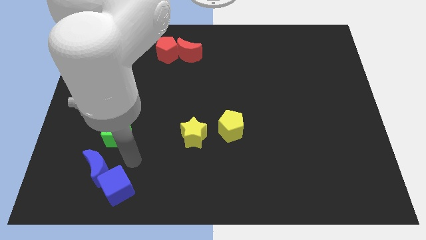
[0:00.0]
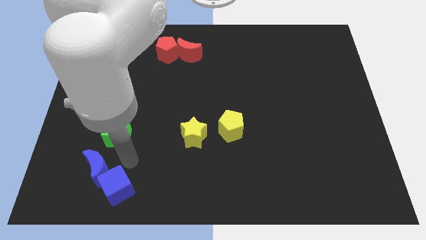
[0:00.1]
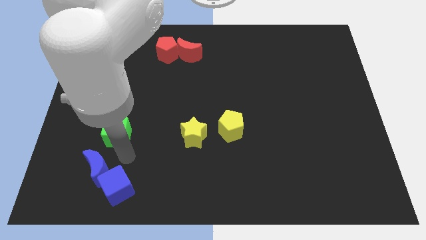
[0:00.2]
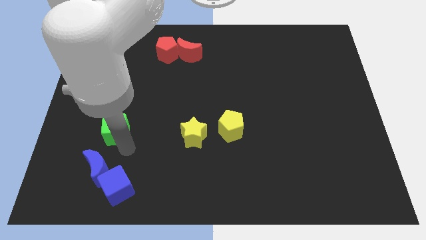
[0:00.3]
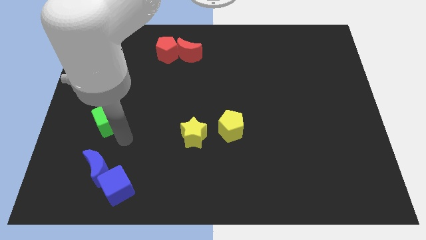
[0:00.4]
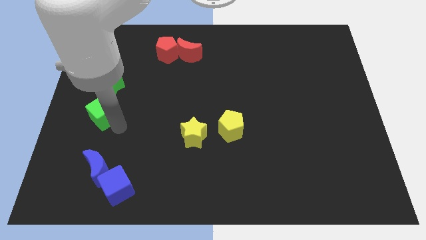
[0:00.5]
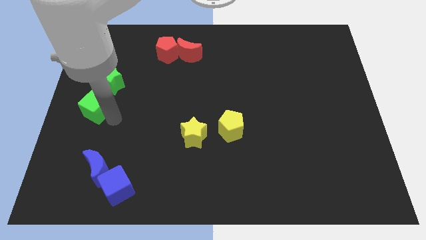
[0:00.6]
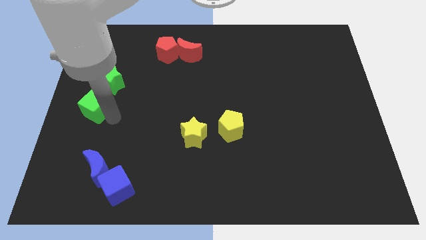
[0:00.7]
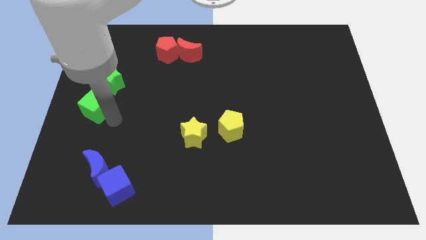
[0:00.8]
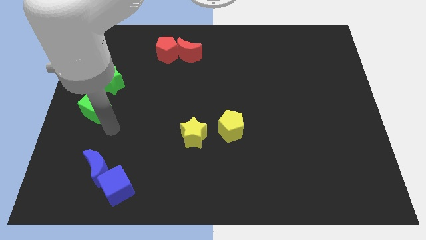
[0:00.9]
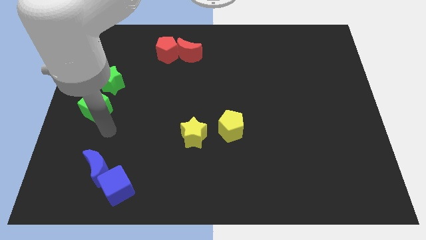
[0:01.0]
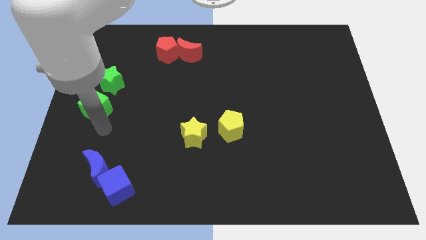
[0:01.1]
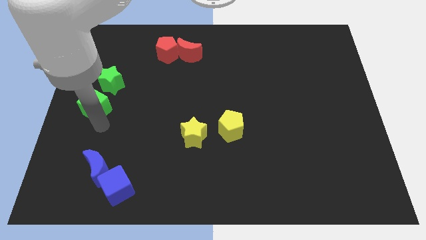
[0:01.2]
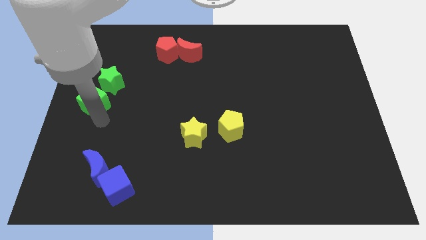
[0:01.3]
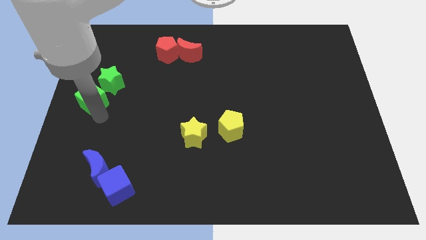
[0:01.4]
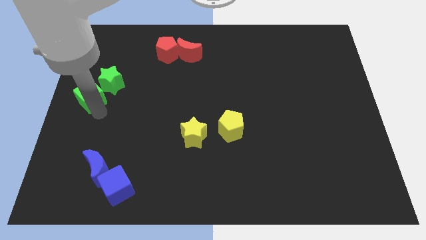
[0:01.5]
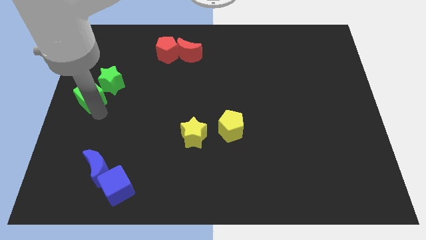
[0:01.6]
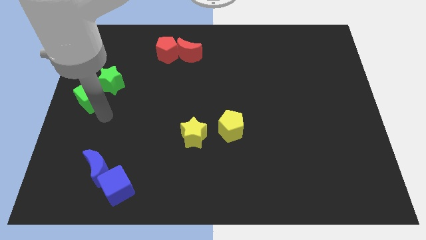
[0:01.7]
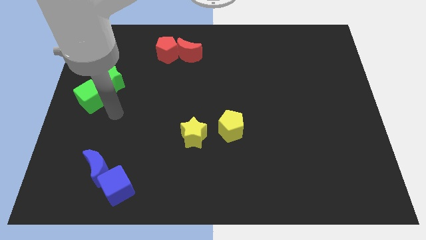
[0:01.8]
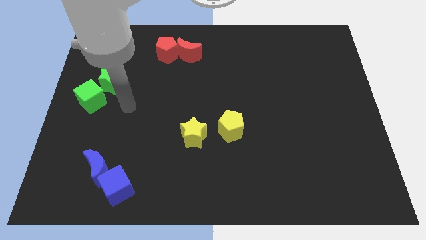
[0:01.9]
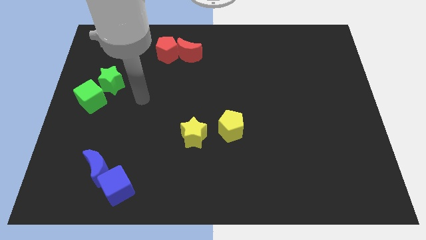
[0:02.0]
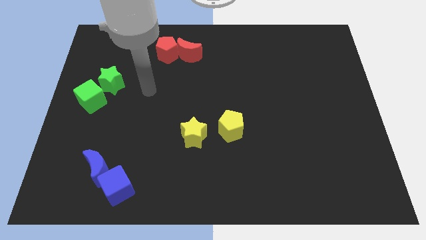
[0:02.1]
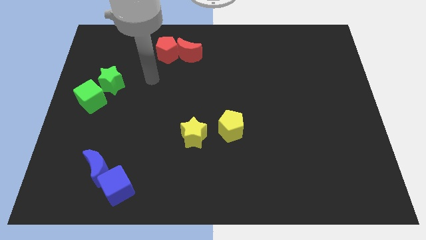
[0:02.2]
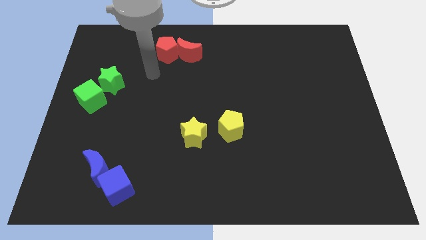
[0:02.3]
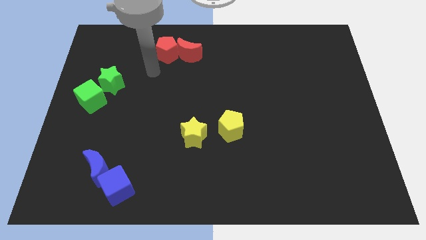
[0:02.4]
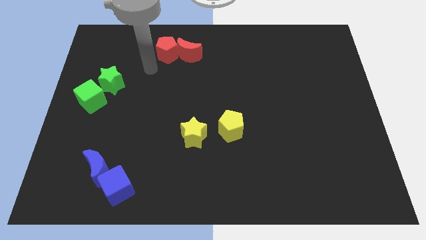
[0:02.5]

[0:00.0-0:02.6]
place the green cube to the bottom left of the green star

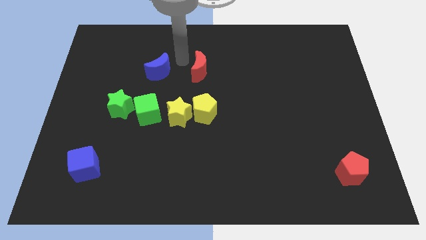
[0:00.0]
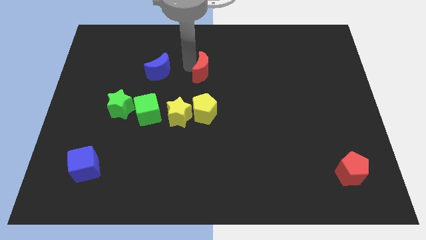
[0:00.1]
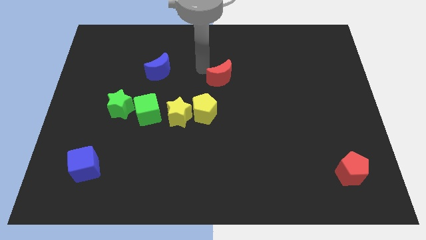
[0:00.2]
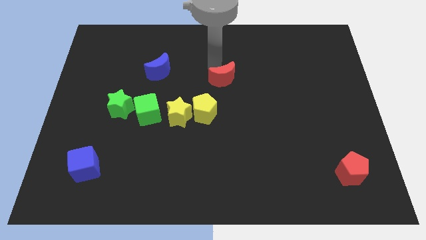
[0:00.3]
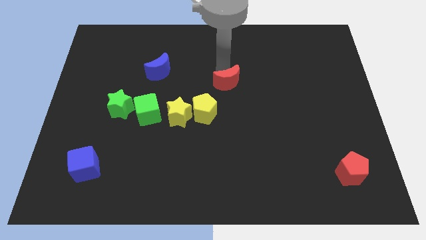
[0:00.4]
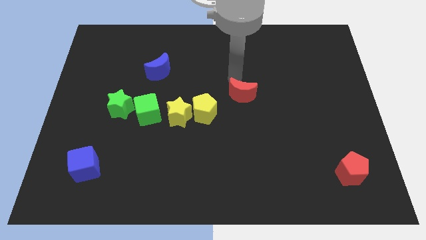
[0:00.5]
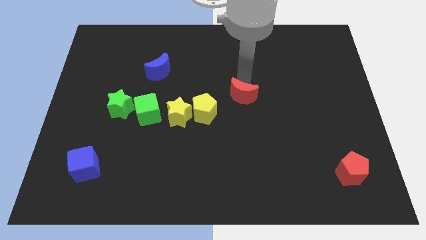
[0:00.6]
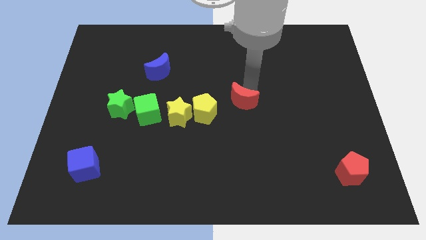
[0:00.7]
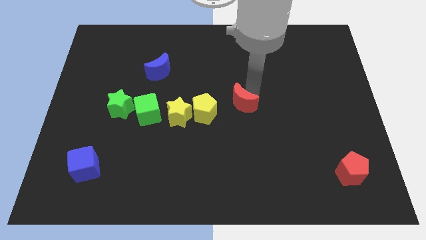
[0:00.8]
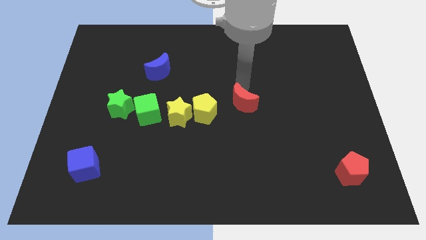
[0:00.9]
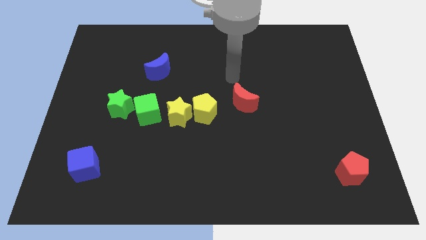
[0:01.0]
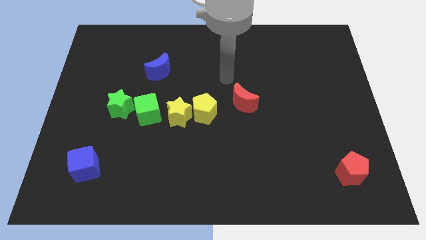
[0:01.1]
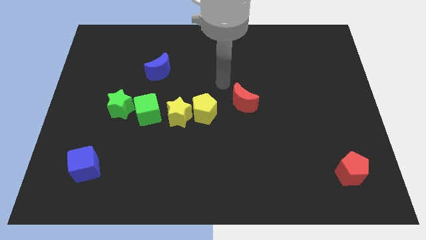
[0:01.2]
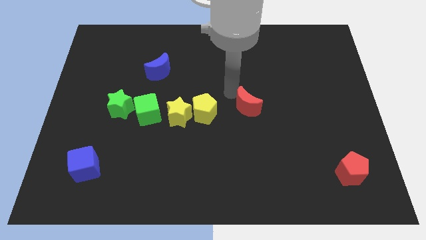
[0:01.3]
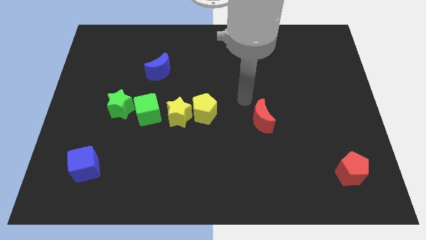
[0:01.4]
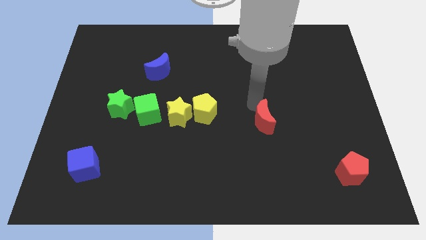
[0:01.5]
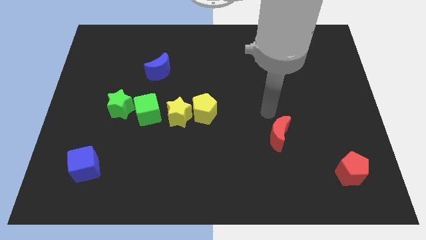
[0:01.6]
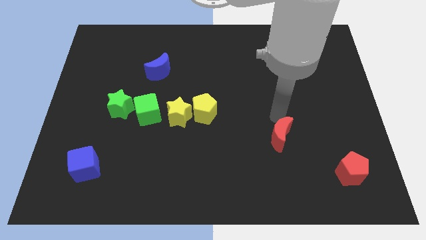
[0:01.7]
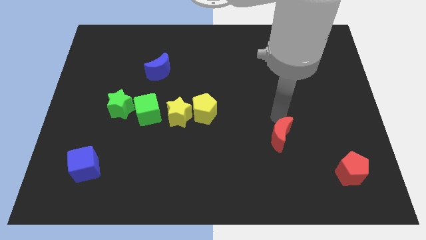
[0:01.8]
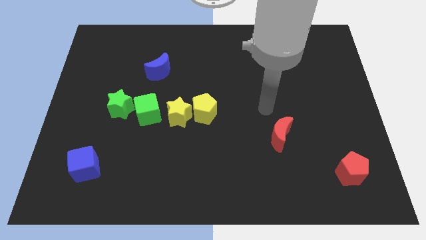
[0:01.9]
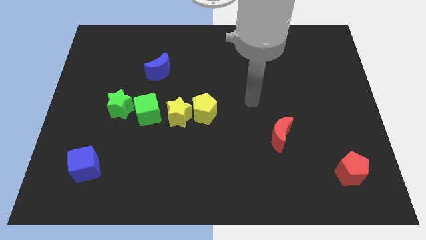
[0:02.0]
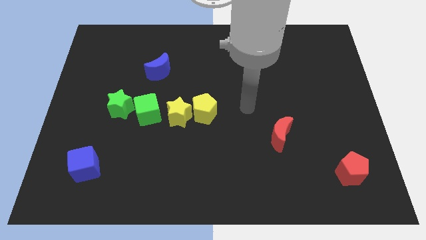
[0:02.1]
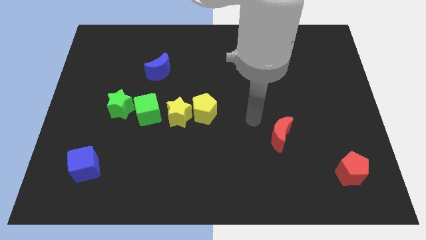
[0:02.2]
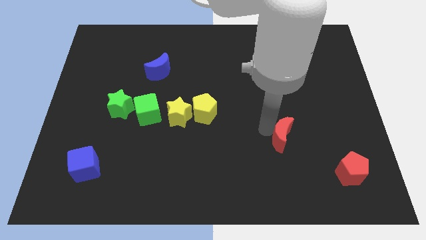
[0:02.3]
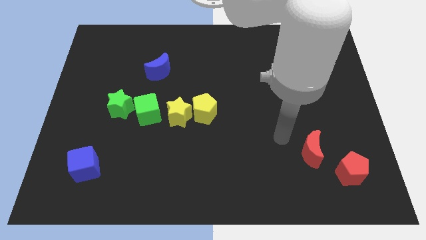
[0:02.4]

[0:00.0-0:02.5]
push the red crescent parallel to the top left to the red pentagon

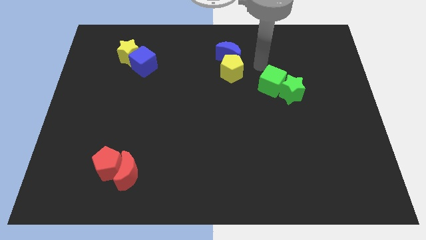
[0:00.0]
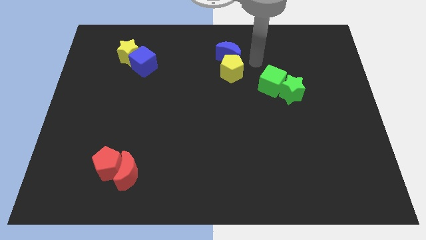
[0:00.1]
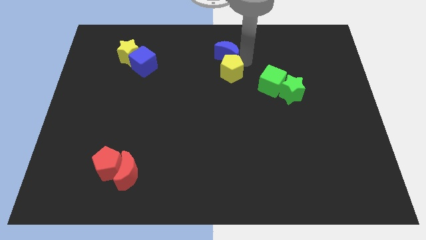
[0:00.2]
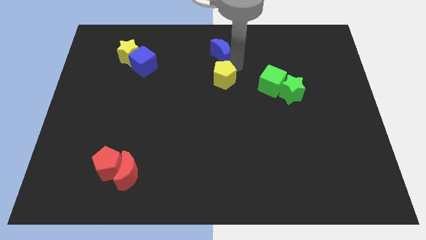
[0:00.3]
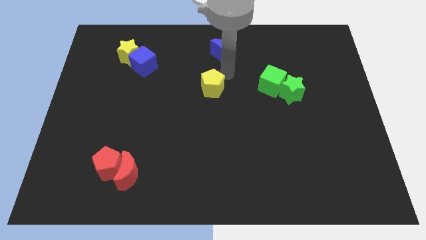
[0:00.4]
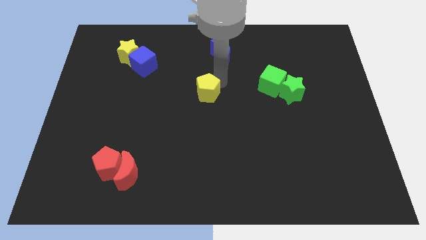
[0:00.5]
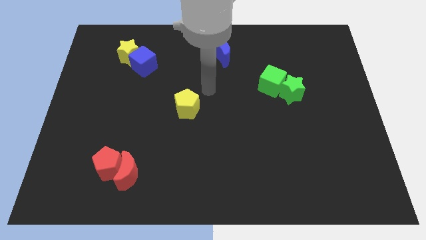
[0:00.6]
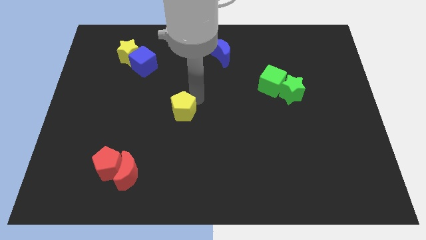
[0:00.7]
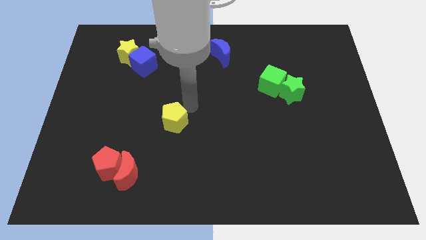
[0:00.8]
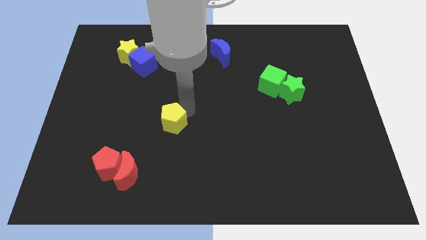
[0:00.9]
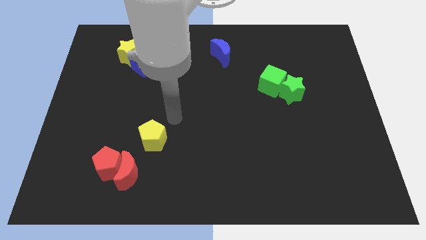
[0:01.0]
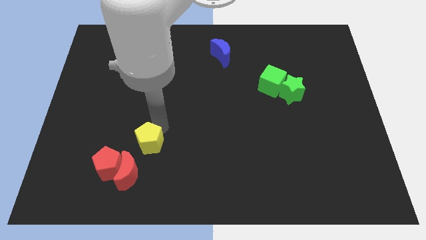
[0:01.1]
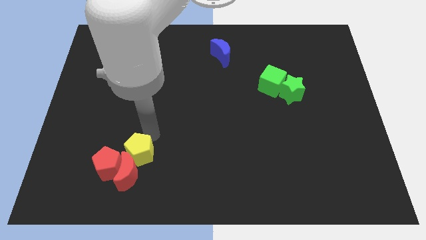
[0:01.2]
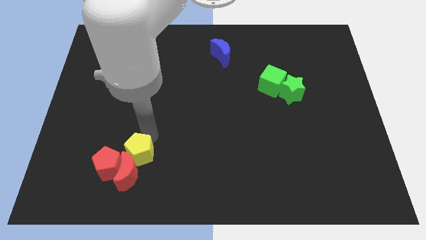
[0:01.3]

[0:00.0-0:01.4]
separate the yellow pentagon from blue moon

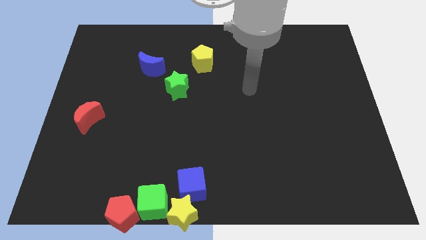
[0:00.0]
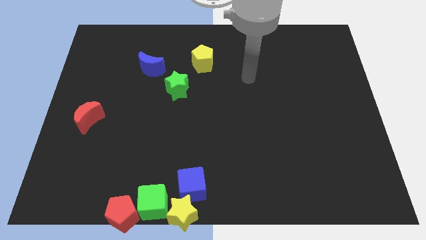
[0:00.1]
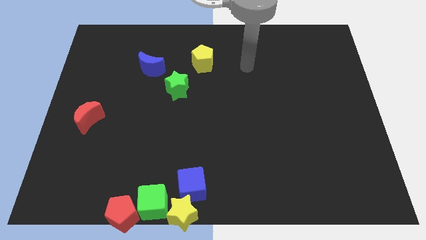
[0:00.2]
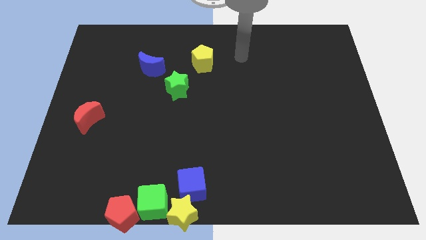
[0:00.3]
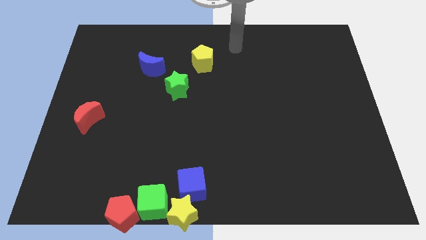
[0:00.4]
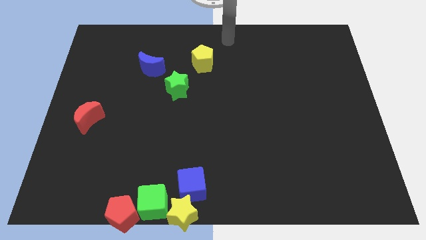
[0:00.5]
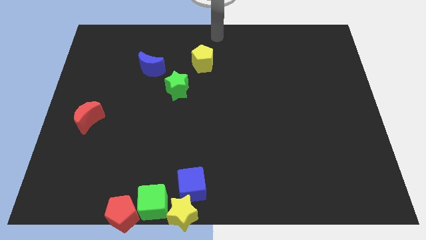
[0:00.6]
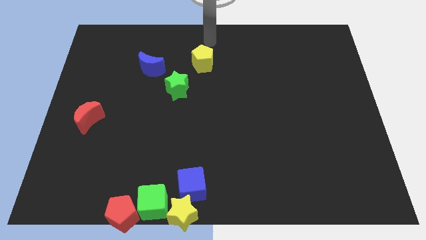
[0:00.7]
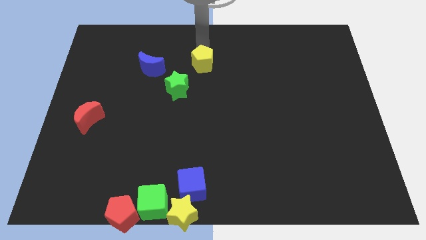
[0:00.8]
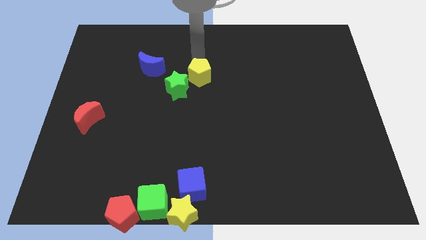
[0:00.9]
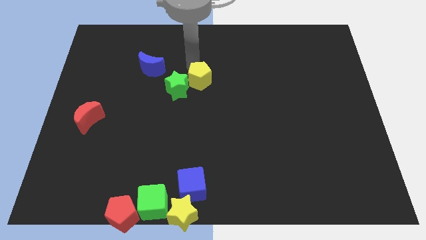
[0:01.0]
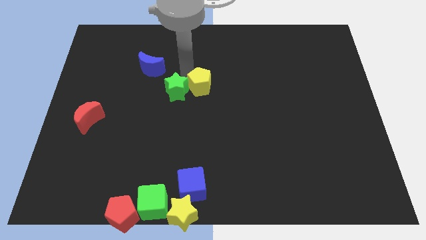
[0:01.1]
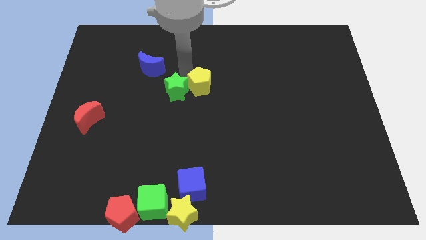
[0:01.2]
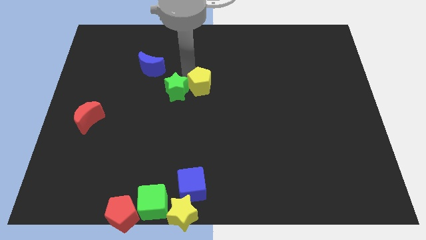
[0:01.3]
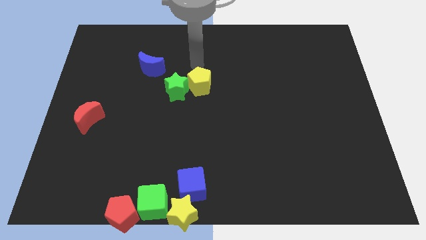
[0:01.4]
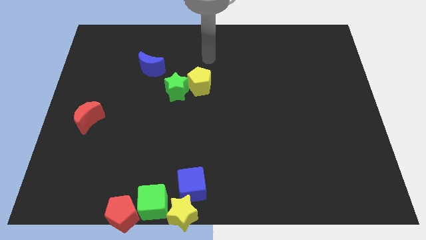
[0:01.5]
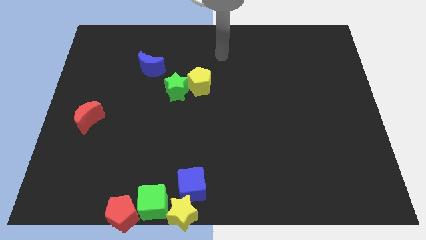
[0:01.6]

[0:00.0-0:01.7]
push the yellow pentagon to the right of the green star

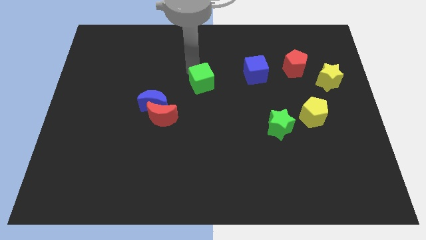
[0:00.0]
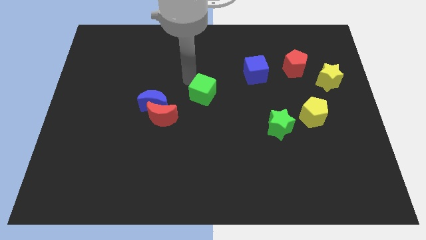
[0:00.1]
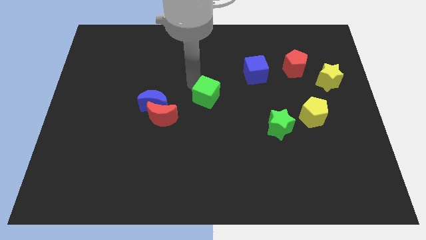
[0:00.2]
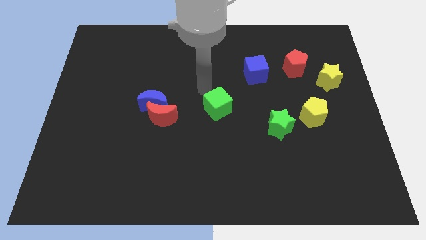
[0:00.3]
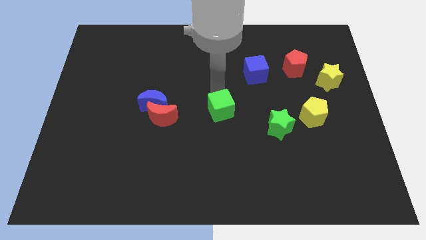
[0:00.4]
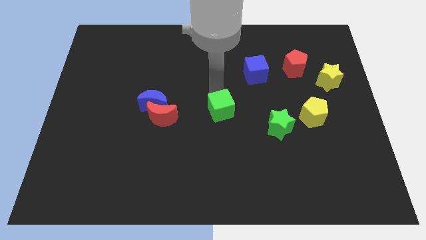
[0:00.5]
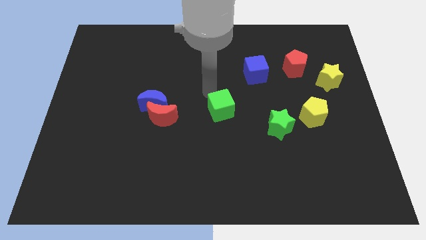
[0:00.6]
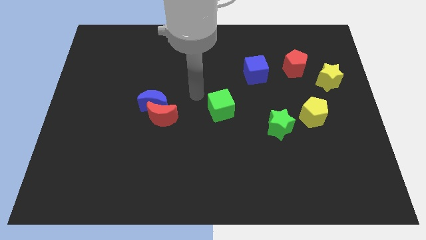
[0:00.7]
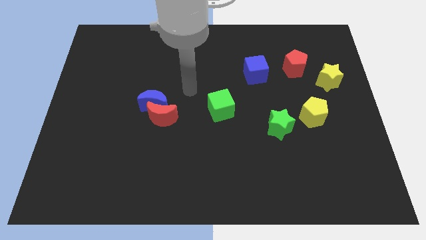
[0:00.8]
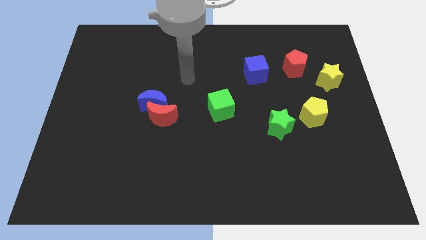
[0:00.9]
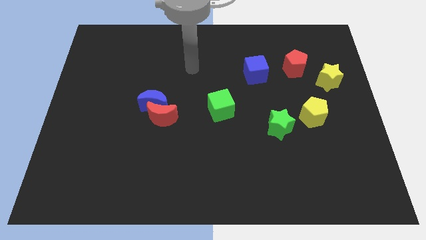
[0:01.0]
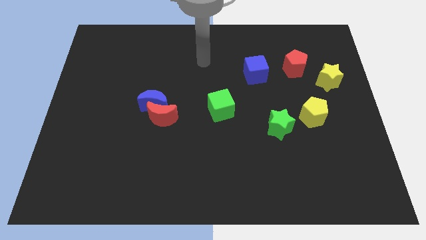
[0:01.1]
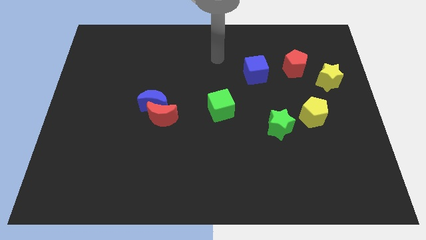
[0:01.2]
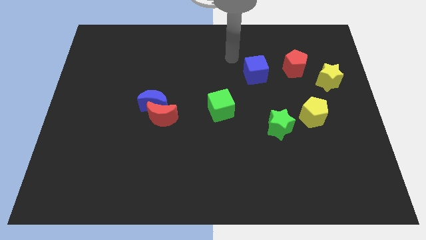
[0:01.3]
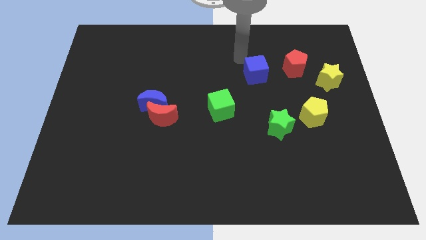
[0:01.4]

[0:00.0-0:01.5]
move the green cube to the right side of the blue moon
